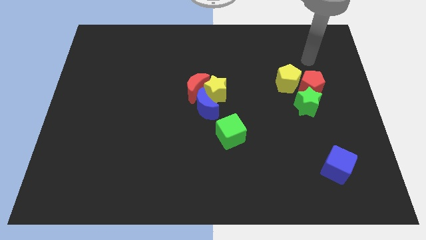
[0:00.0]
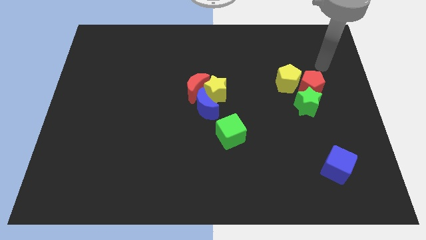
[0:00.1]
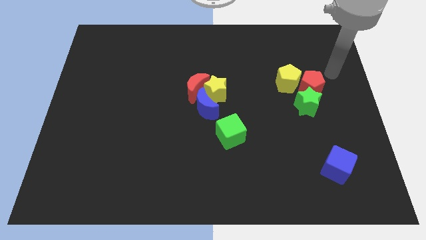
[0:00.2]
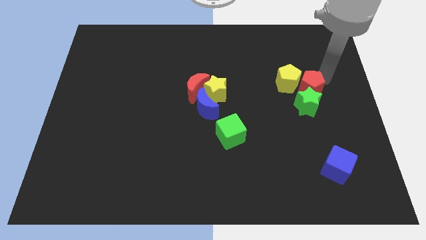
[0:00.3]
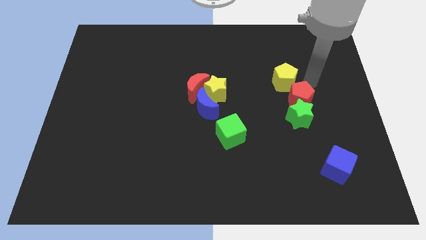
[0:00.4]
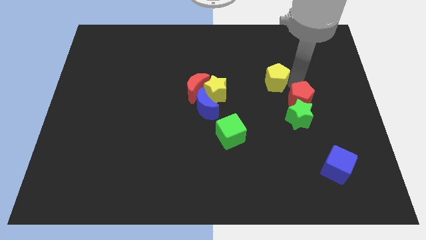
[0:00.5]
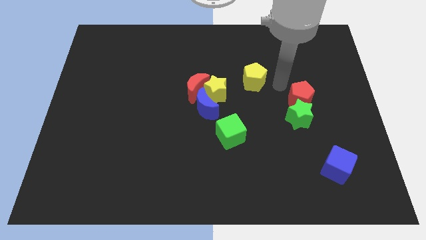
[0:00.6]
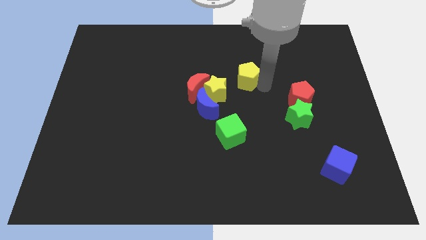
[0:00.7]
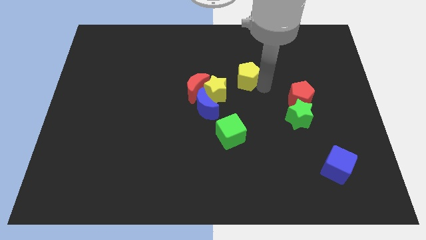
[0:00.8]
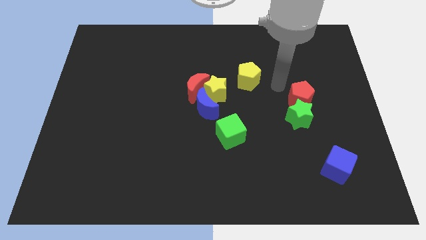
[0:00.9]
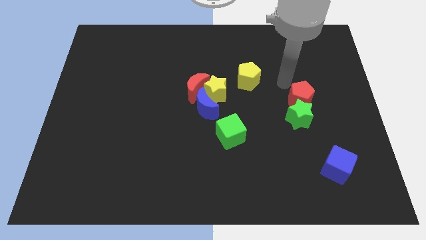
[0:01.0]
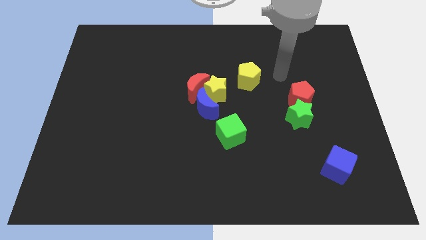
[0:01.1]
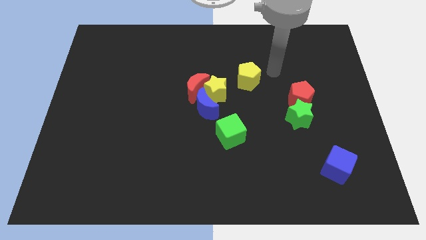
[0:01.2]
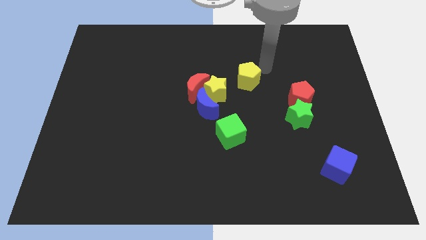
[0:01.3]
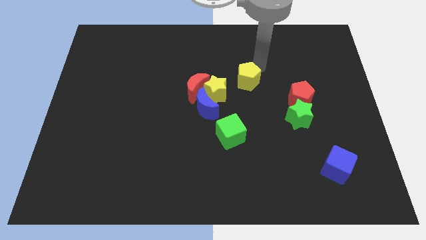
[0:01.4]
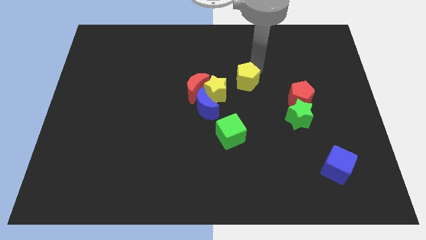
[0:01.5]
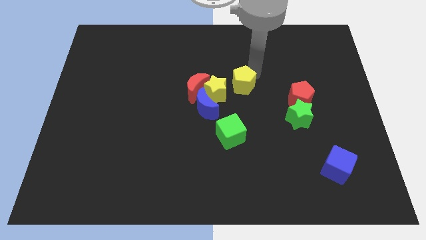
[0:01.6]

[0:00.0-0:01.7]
separate the yellow pentagon from the red pentagon

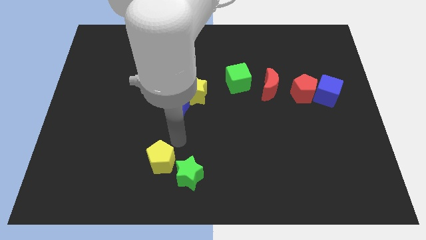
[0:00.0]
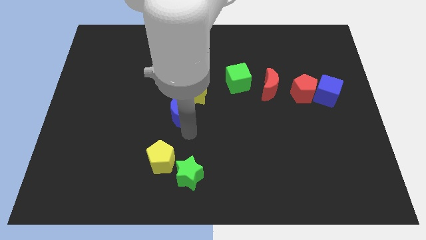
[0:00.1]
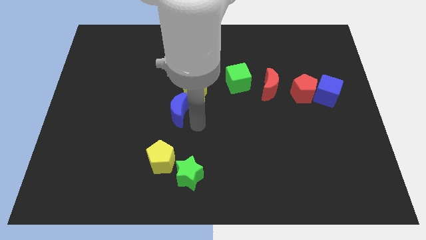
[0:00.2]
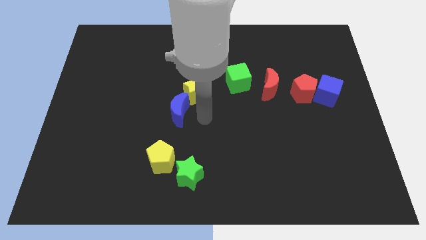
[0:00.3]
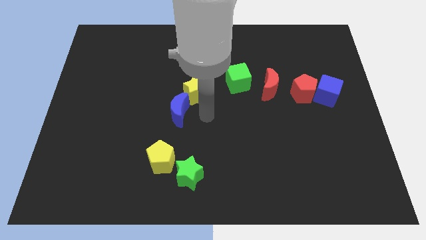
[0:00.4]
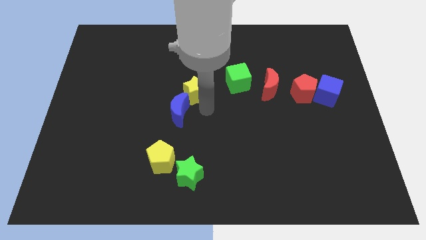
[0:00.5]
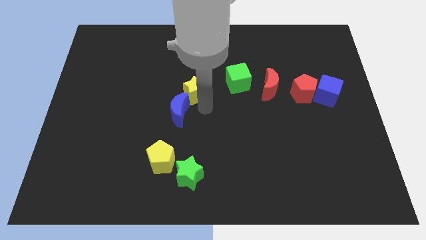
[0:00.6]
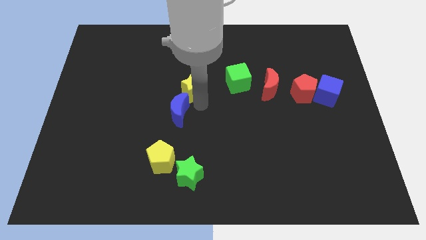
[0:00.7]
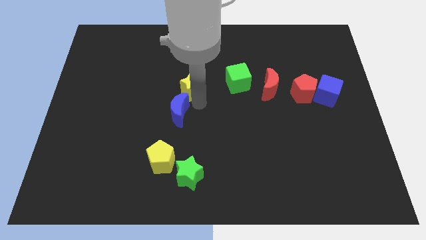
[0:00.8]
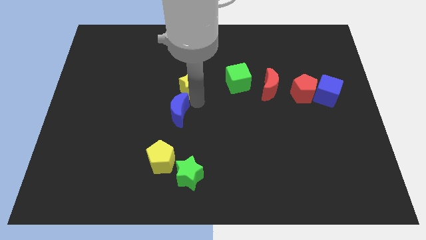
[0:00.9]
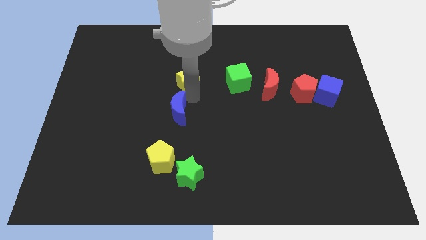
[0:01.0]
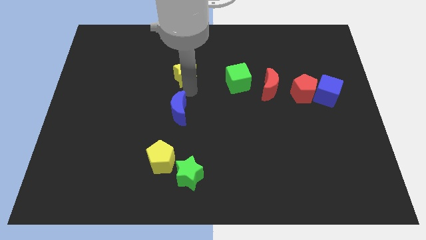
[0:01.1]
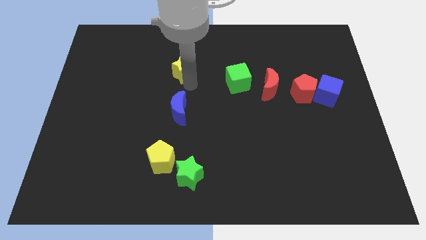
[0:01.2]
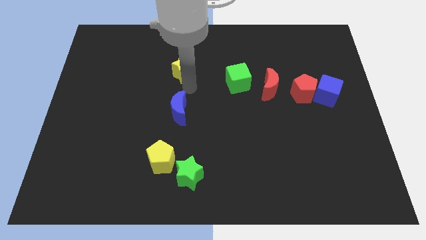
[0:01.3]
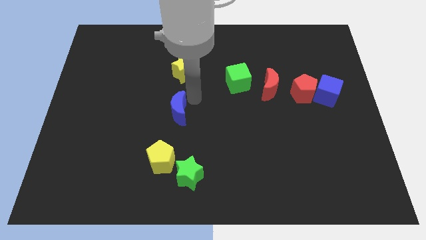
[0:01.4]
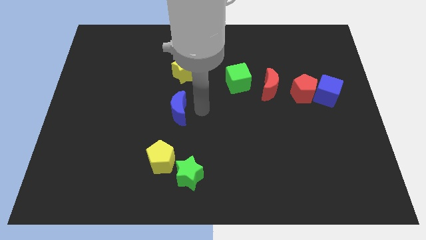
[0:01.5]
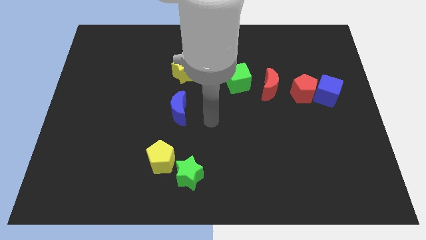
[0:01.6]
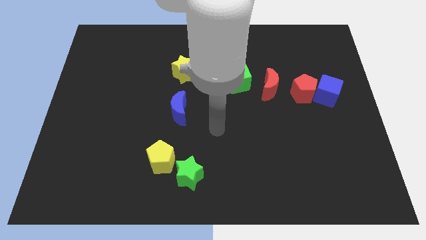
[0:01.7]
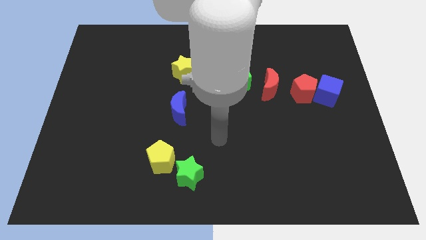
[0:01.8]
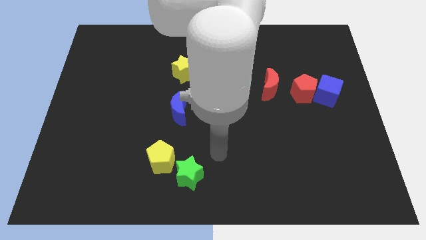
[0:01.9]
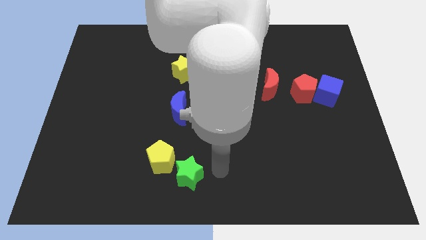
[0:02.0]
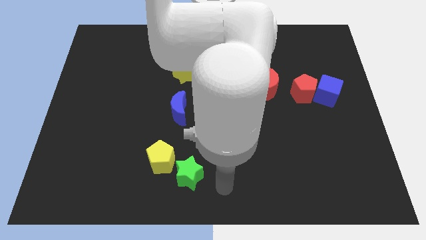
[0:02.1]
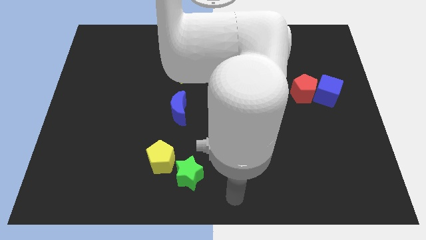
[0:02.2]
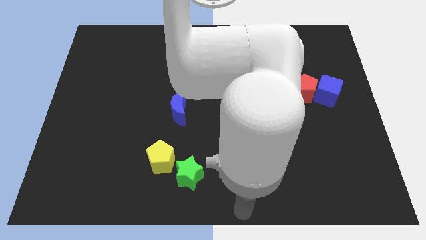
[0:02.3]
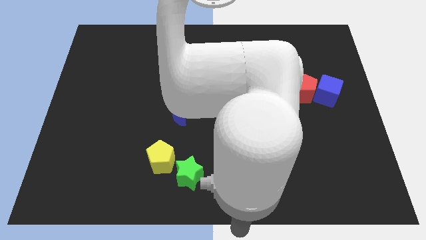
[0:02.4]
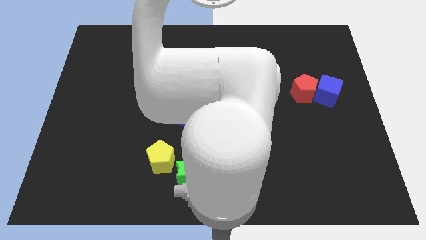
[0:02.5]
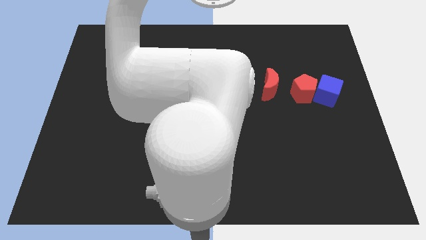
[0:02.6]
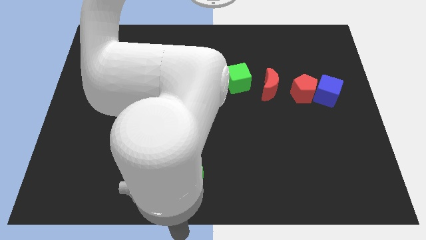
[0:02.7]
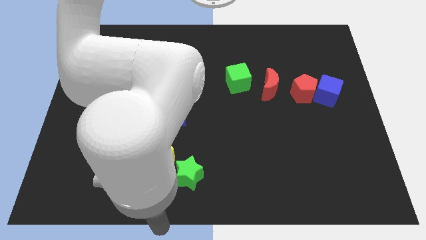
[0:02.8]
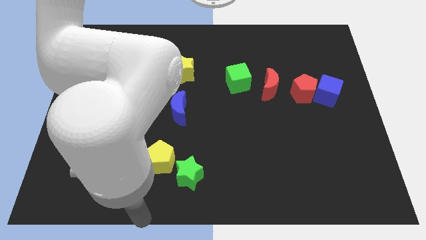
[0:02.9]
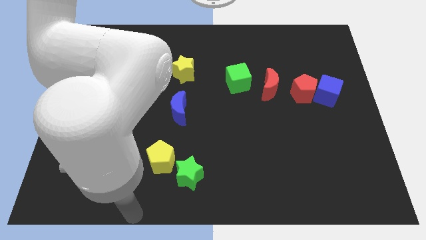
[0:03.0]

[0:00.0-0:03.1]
move the yellow star slightly away from the blue crescent

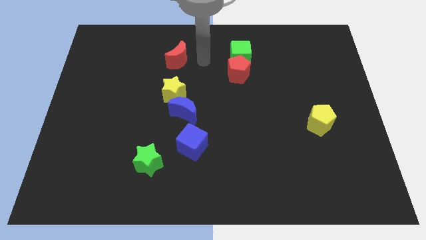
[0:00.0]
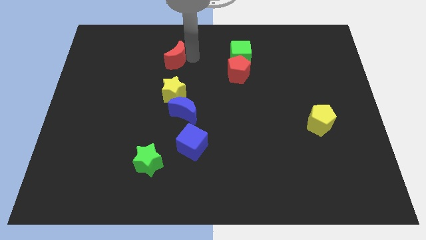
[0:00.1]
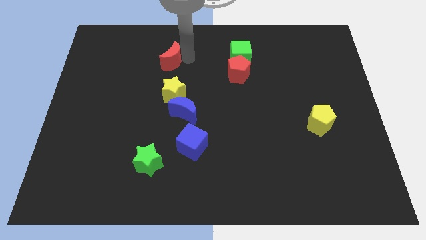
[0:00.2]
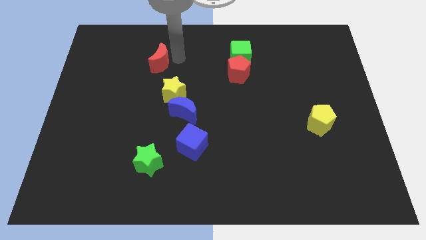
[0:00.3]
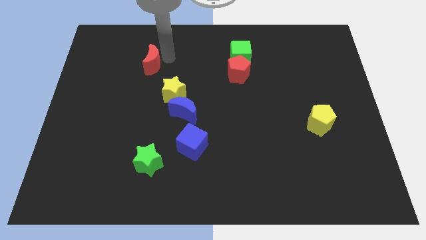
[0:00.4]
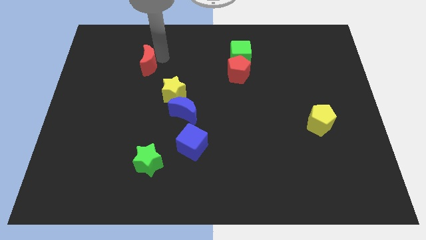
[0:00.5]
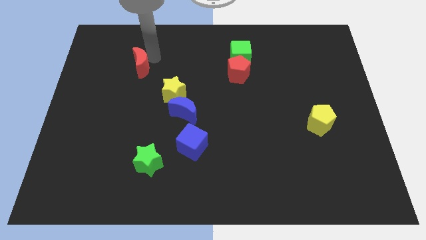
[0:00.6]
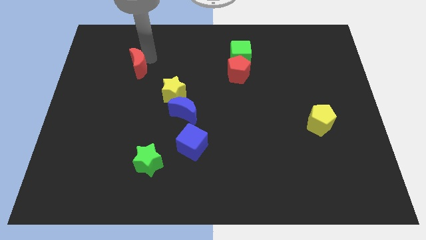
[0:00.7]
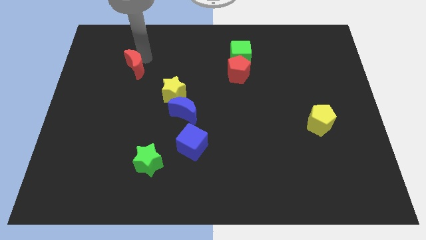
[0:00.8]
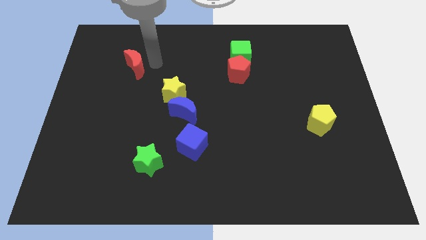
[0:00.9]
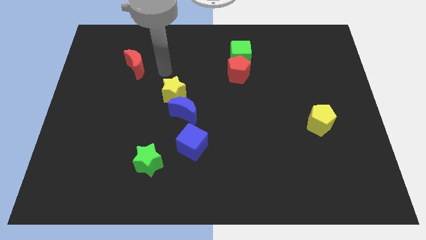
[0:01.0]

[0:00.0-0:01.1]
place the red moon diagonally to the yellow star

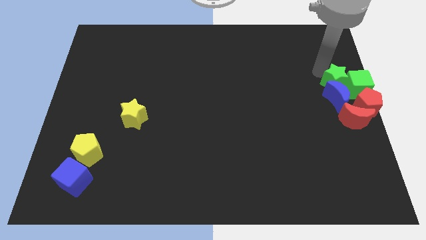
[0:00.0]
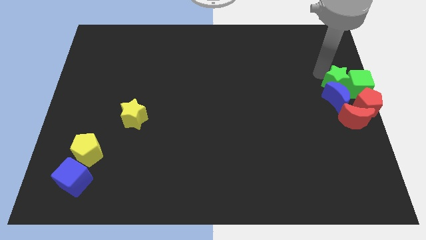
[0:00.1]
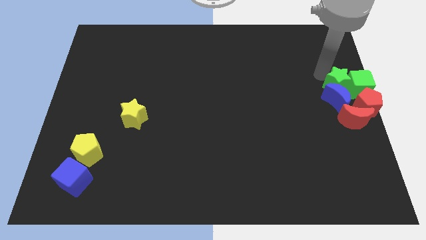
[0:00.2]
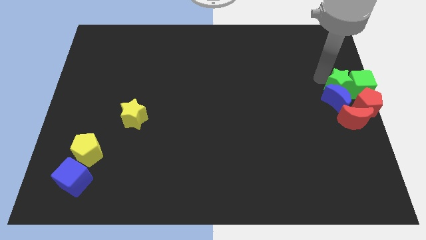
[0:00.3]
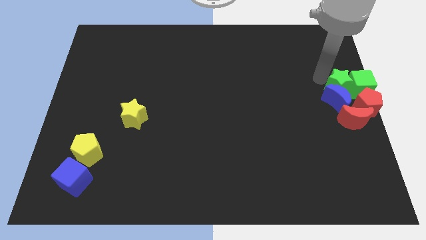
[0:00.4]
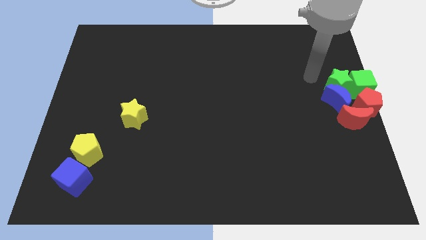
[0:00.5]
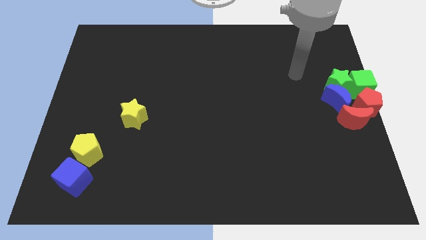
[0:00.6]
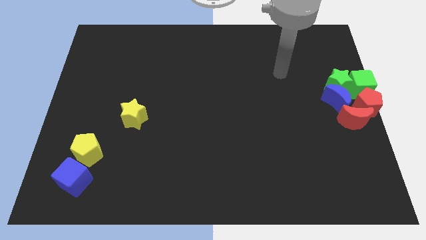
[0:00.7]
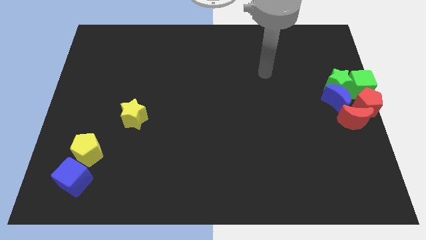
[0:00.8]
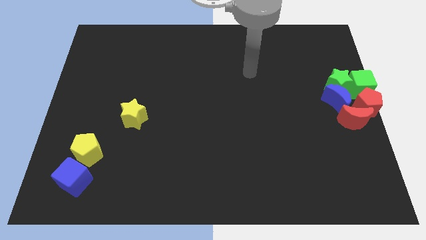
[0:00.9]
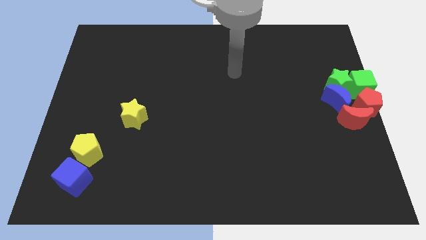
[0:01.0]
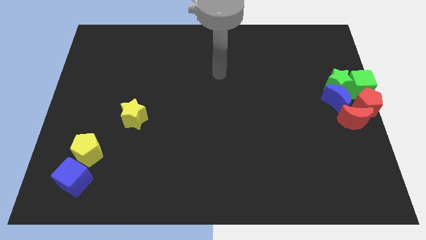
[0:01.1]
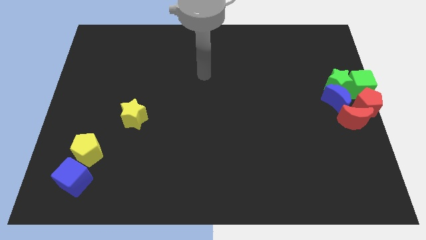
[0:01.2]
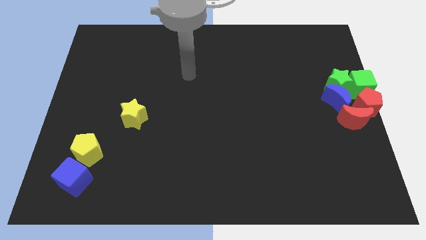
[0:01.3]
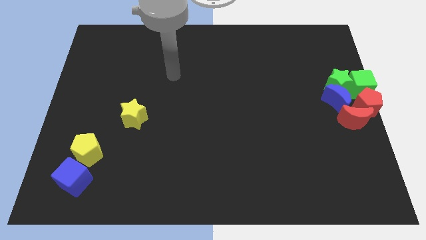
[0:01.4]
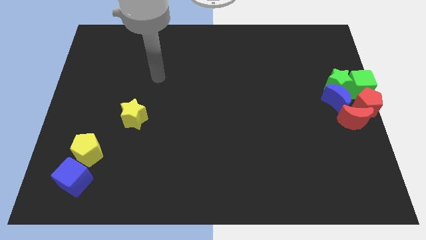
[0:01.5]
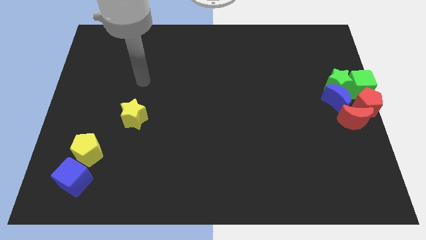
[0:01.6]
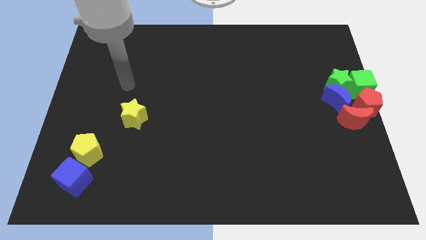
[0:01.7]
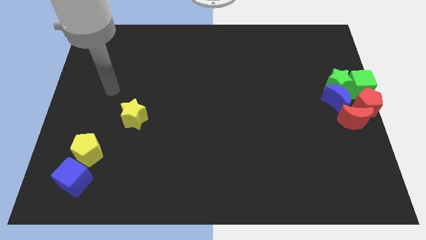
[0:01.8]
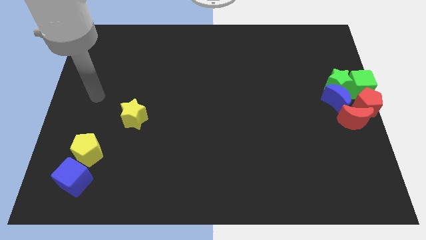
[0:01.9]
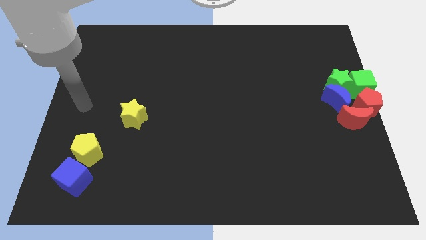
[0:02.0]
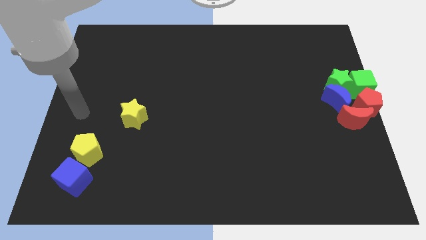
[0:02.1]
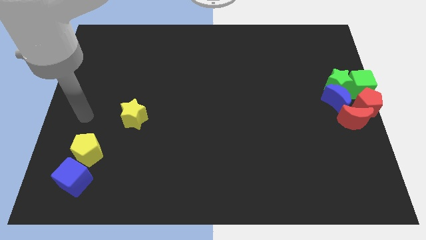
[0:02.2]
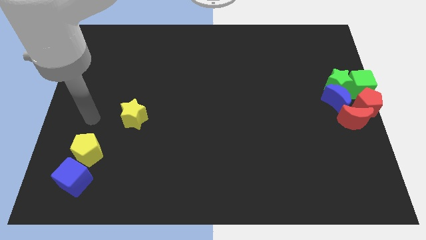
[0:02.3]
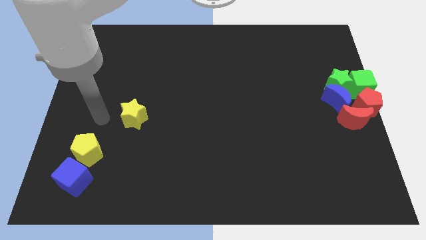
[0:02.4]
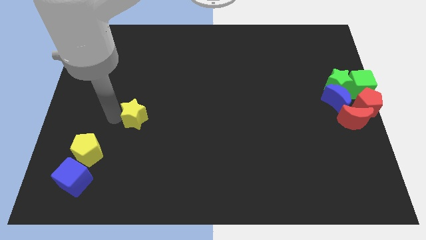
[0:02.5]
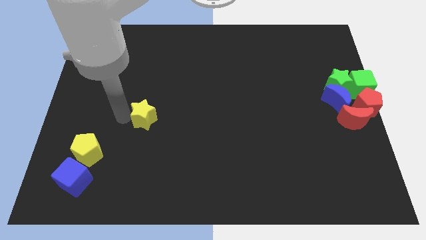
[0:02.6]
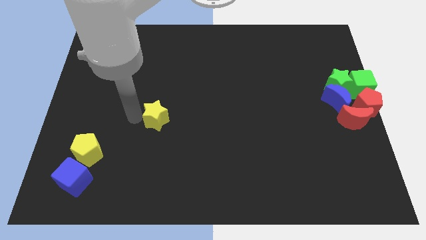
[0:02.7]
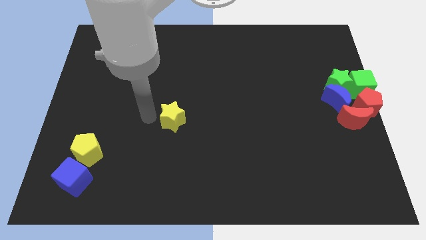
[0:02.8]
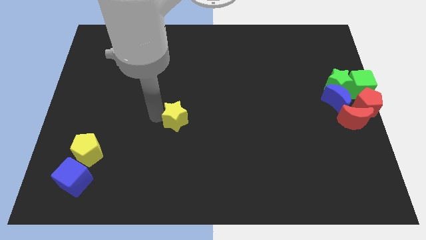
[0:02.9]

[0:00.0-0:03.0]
move your arm away from the green star

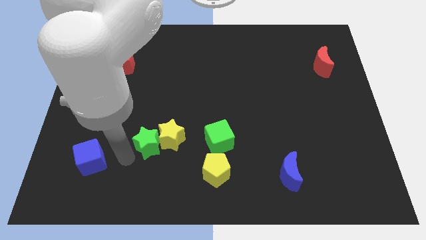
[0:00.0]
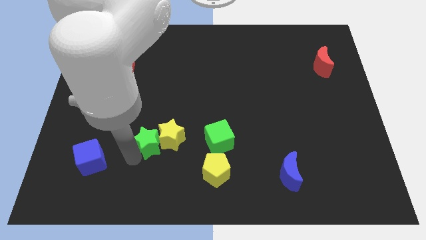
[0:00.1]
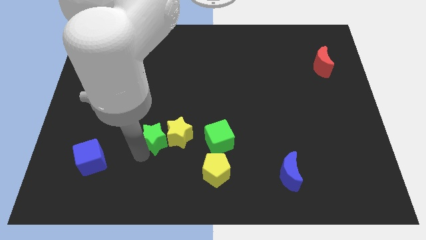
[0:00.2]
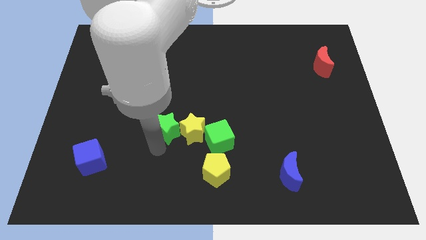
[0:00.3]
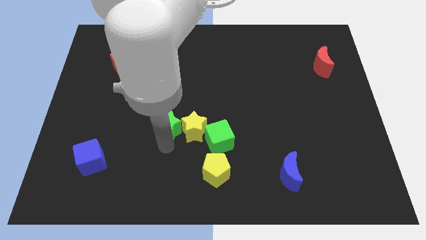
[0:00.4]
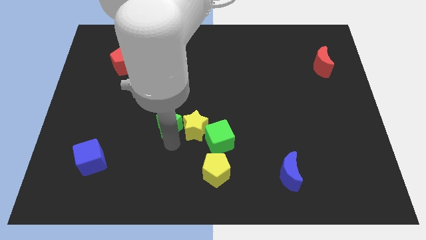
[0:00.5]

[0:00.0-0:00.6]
push the green star and yellow star to the centre
